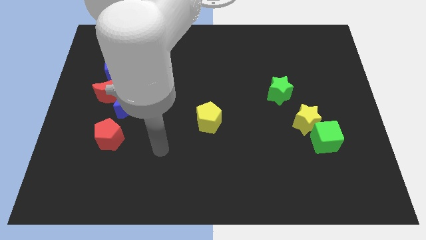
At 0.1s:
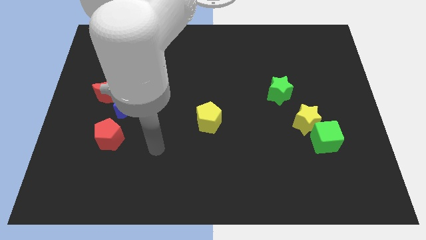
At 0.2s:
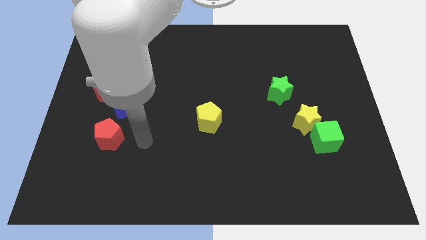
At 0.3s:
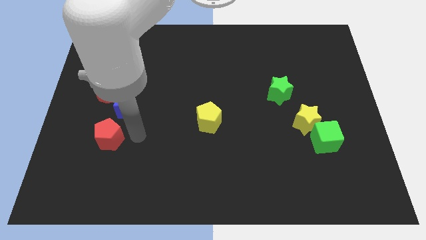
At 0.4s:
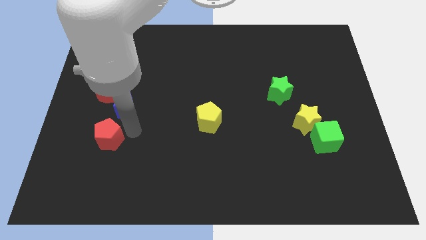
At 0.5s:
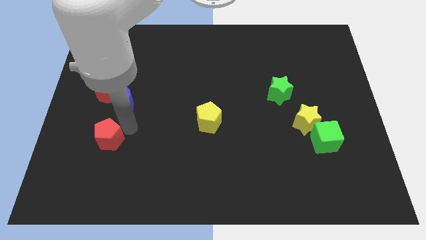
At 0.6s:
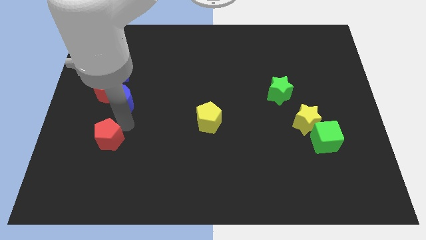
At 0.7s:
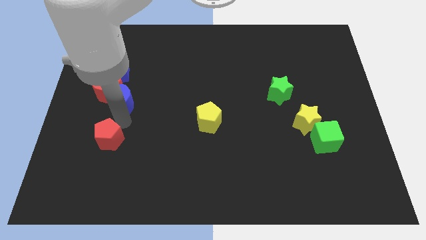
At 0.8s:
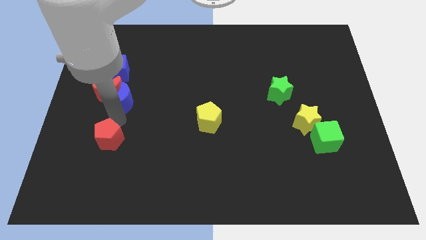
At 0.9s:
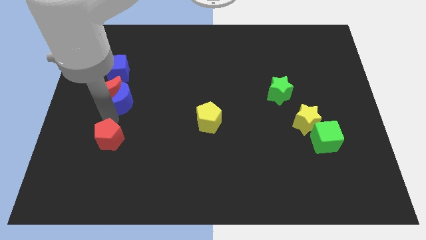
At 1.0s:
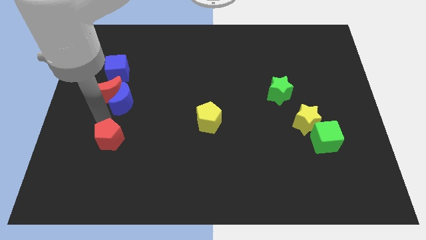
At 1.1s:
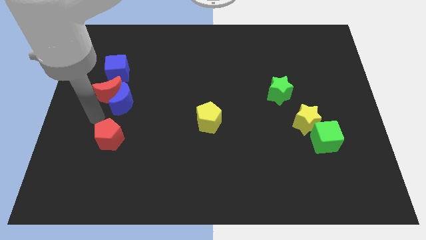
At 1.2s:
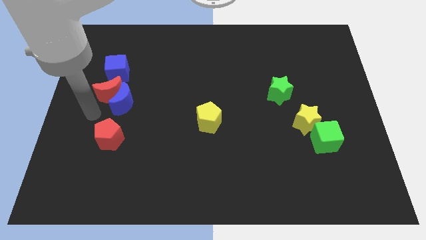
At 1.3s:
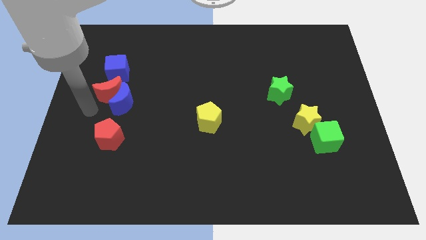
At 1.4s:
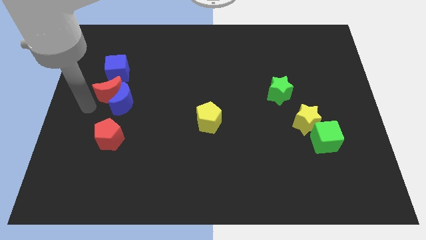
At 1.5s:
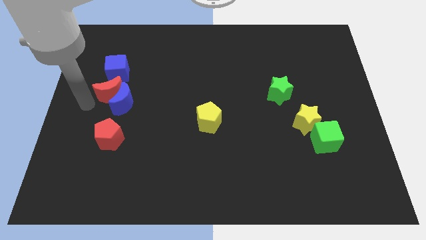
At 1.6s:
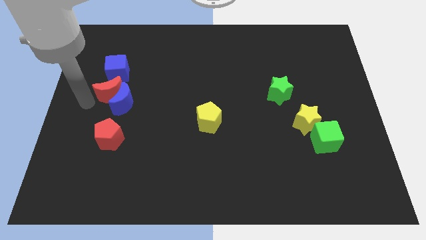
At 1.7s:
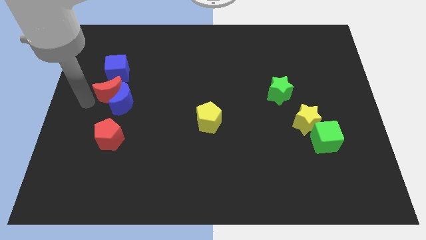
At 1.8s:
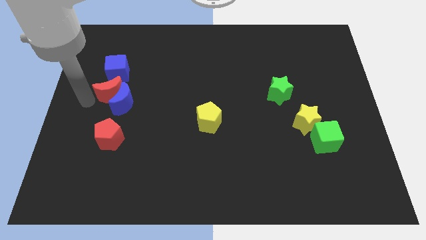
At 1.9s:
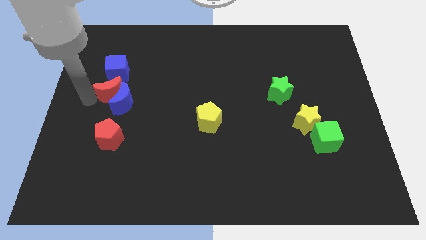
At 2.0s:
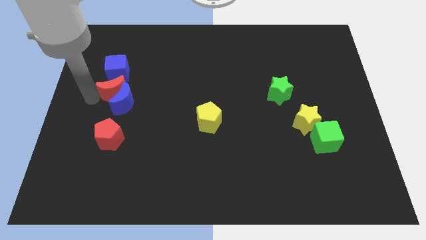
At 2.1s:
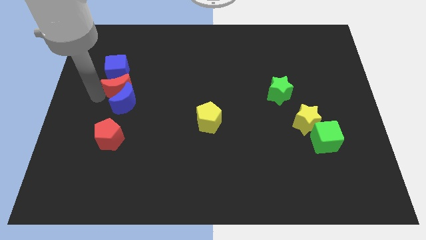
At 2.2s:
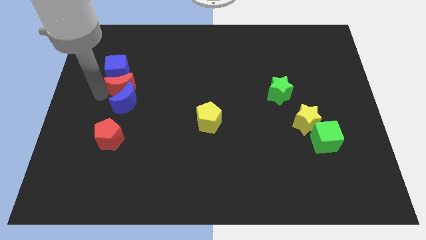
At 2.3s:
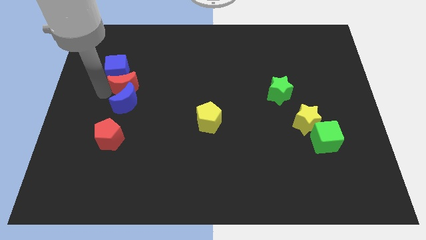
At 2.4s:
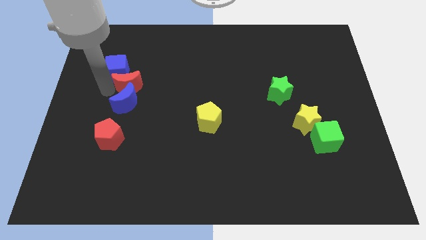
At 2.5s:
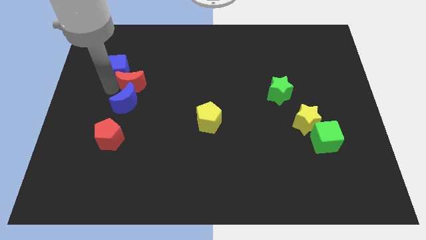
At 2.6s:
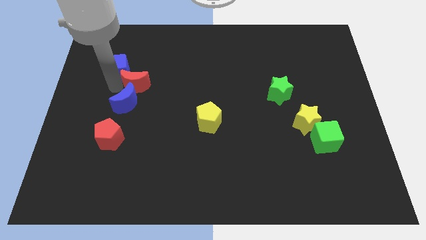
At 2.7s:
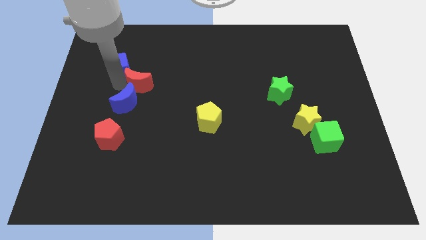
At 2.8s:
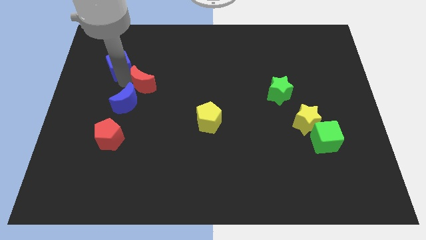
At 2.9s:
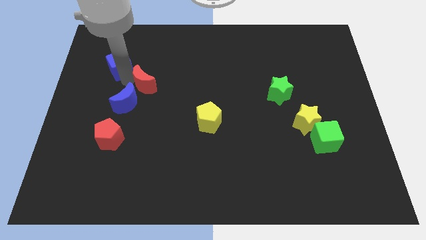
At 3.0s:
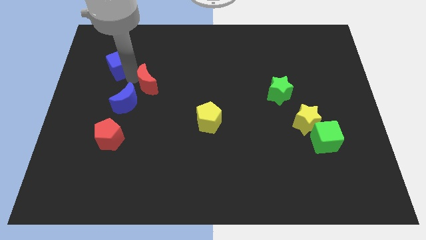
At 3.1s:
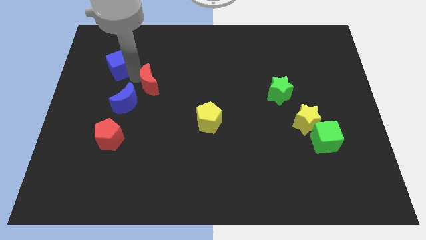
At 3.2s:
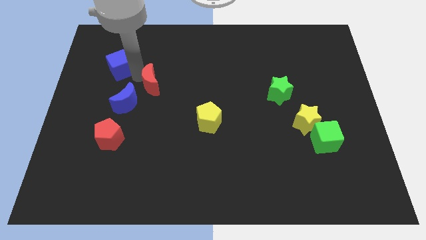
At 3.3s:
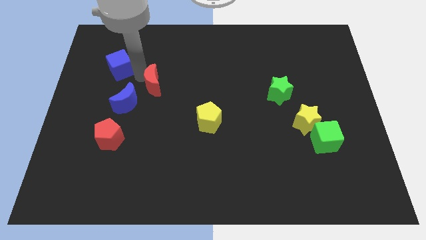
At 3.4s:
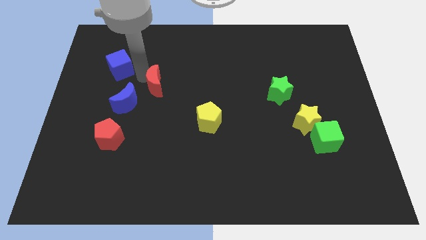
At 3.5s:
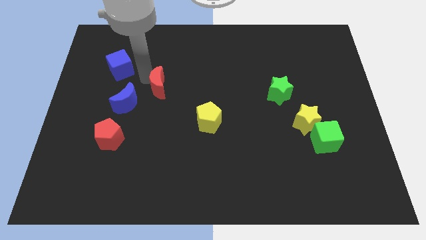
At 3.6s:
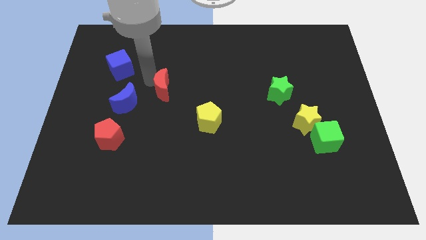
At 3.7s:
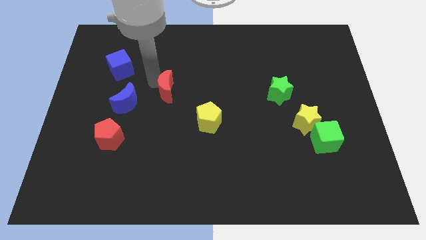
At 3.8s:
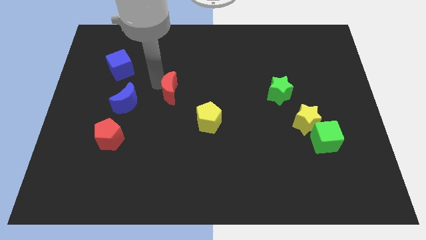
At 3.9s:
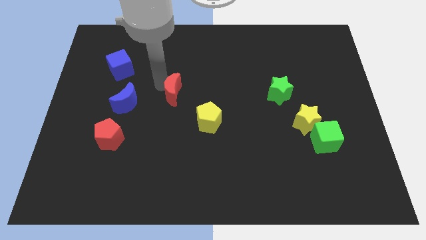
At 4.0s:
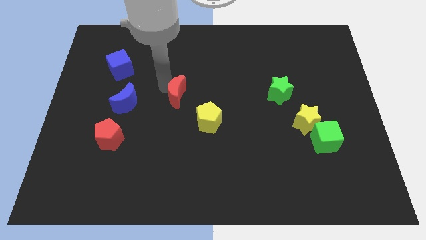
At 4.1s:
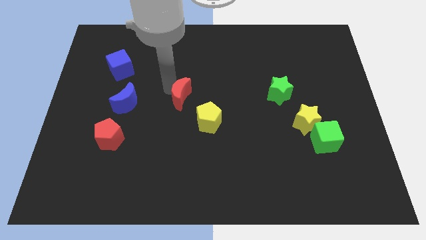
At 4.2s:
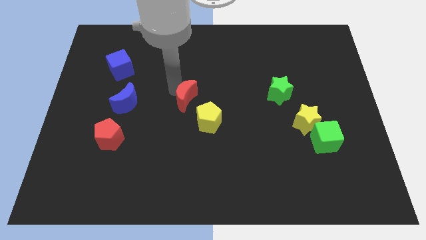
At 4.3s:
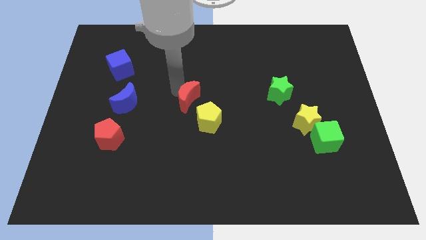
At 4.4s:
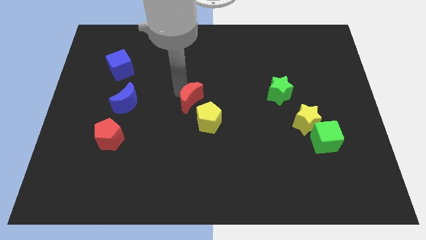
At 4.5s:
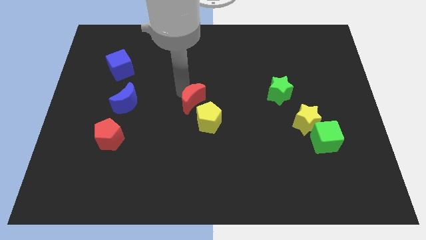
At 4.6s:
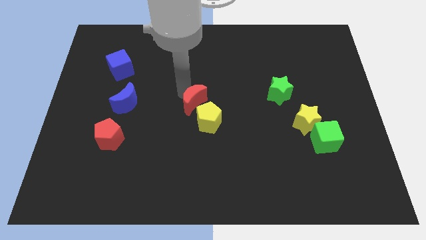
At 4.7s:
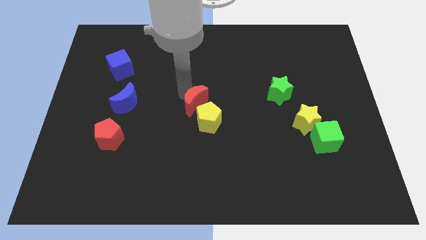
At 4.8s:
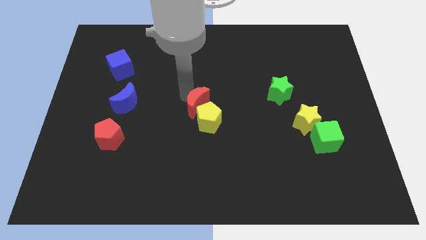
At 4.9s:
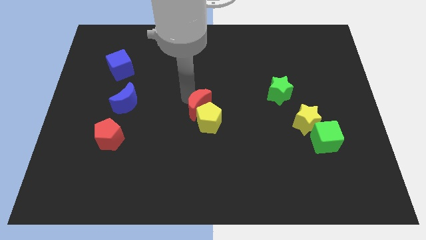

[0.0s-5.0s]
push the red moon to the yellow pentagon

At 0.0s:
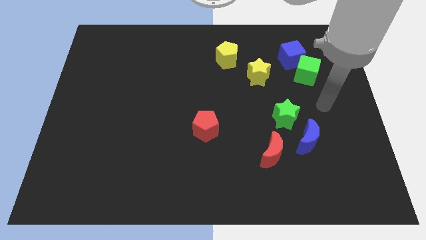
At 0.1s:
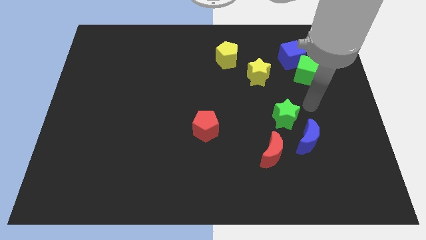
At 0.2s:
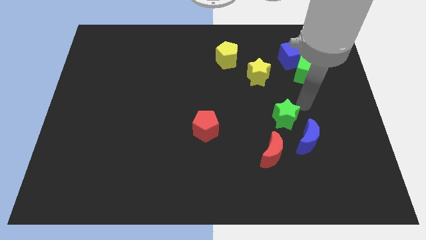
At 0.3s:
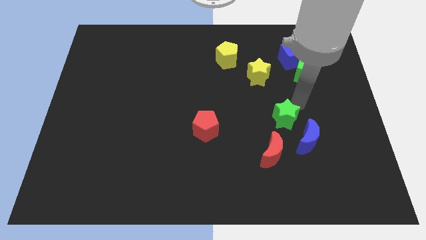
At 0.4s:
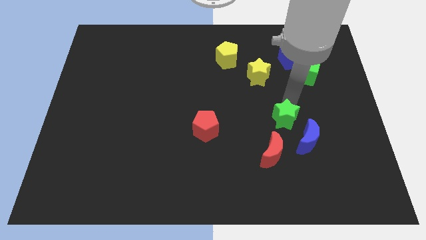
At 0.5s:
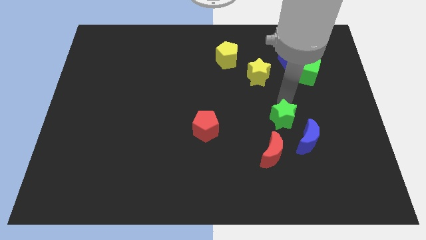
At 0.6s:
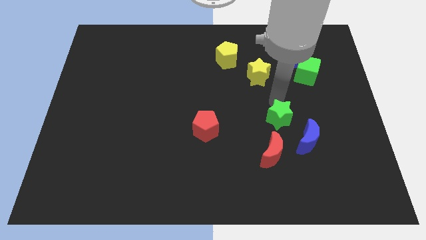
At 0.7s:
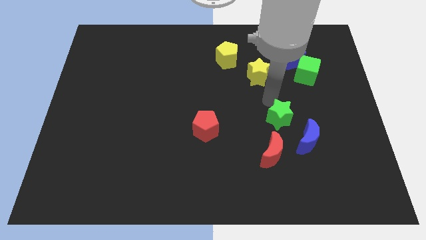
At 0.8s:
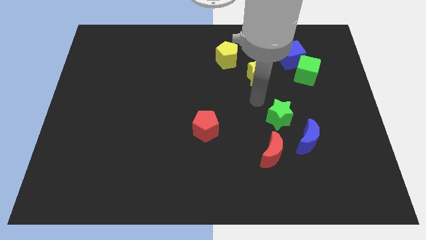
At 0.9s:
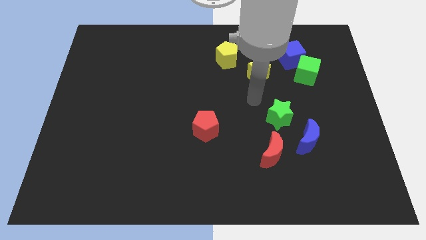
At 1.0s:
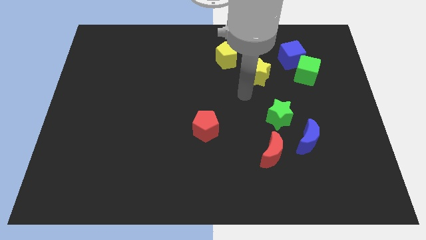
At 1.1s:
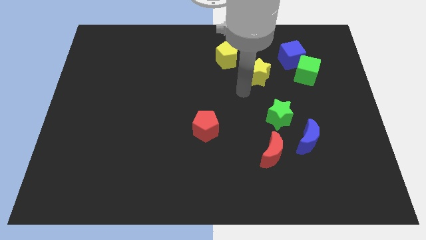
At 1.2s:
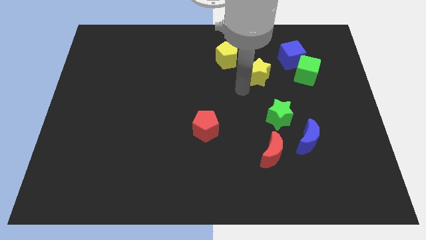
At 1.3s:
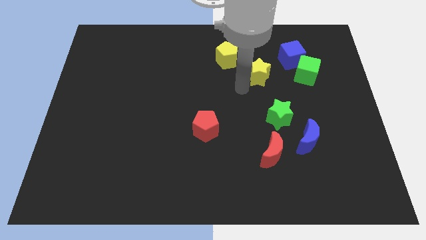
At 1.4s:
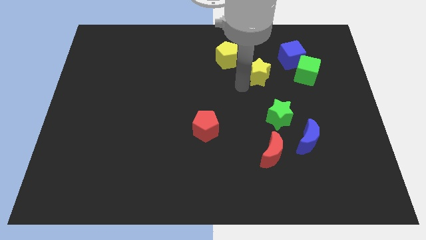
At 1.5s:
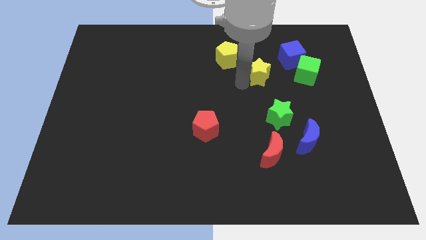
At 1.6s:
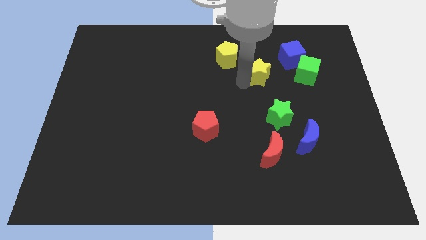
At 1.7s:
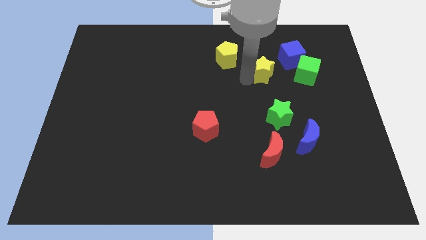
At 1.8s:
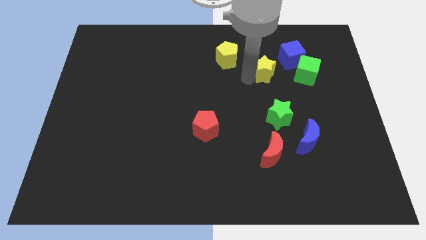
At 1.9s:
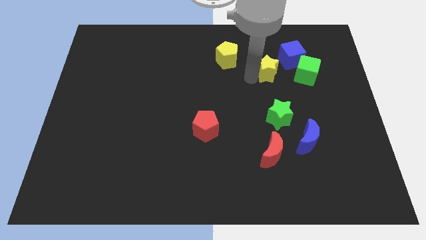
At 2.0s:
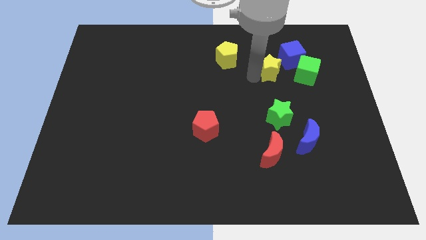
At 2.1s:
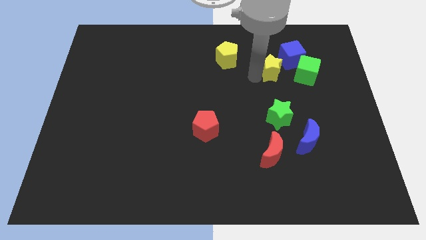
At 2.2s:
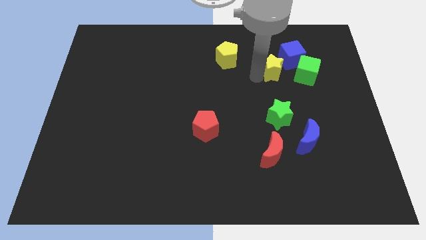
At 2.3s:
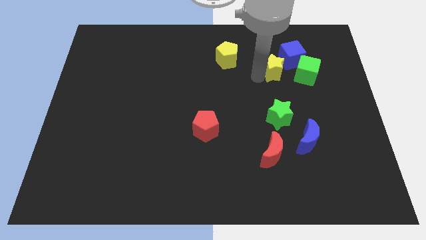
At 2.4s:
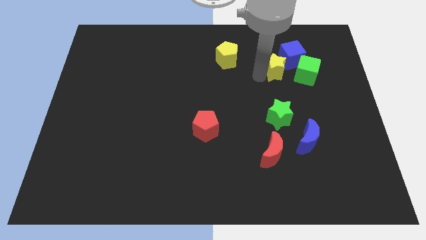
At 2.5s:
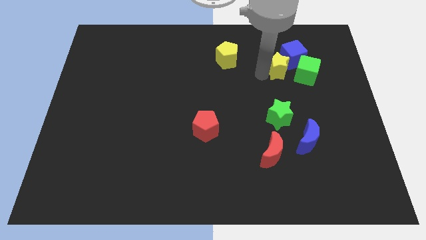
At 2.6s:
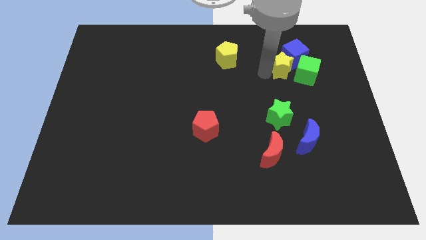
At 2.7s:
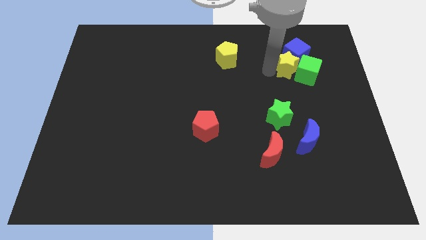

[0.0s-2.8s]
put the yellow star towards the blue cube

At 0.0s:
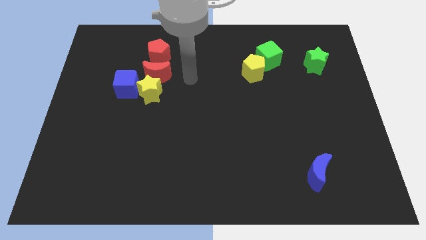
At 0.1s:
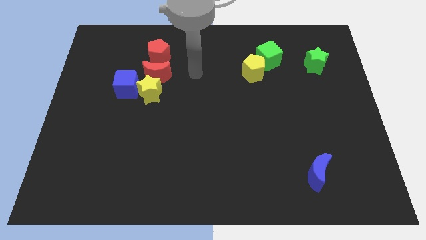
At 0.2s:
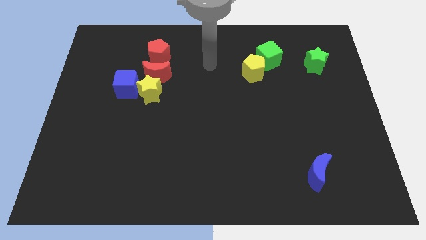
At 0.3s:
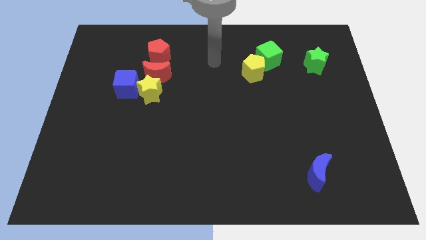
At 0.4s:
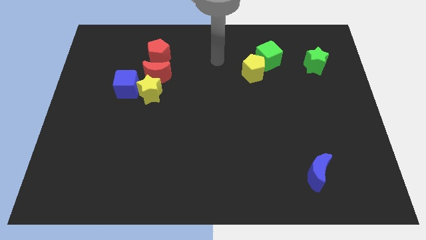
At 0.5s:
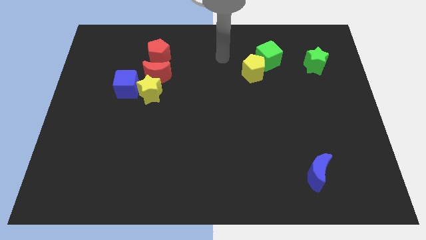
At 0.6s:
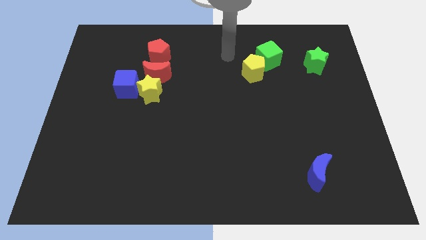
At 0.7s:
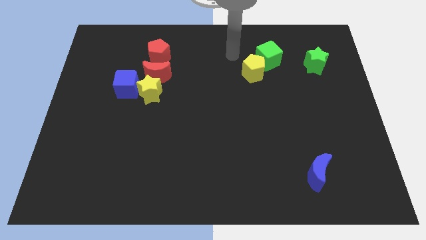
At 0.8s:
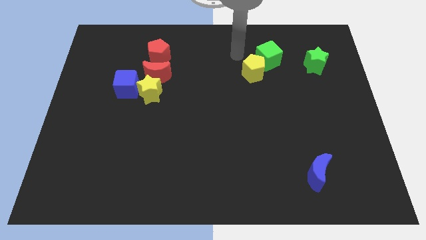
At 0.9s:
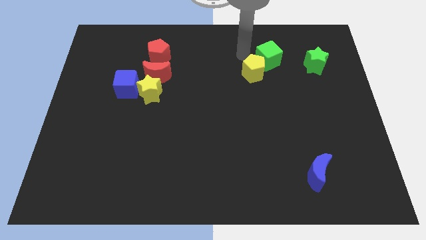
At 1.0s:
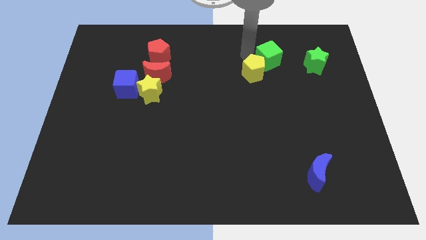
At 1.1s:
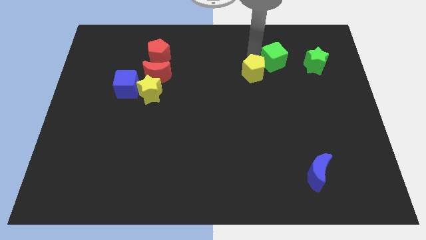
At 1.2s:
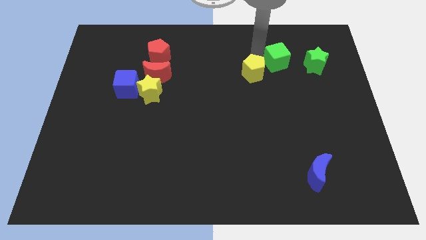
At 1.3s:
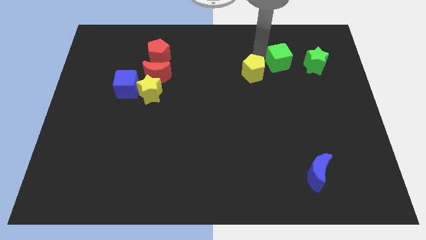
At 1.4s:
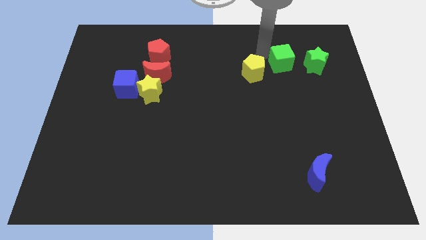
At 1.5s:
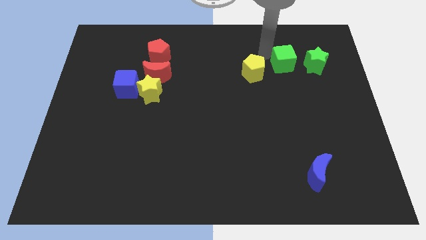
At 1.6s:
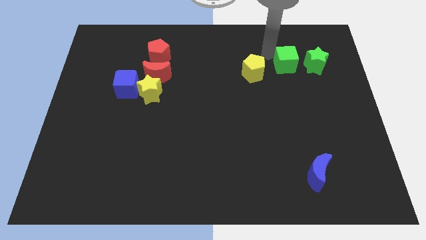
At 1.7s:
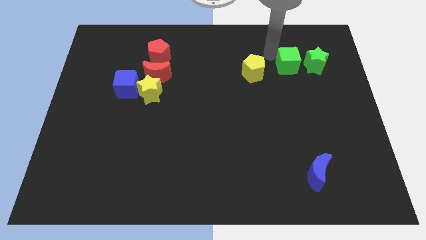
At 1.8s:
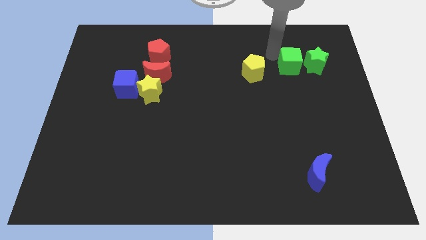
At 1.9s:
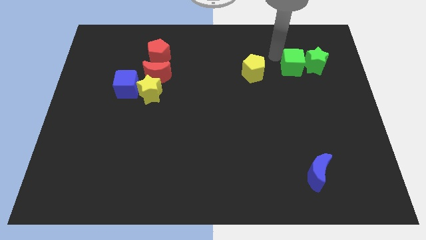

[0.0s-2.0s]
move the green cube to the green star
